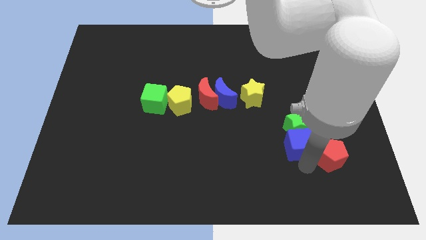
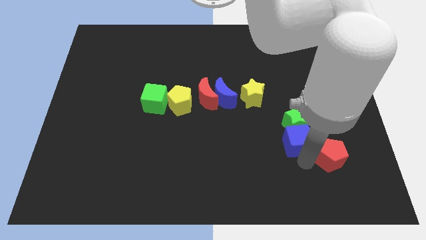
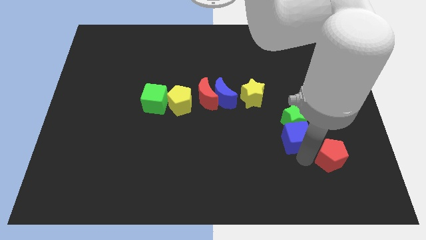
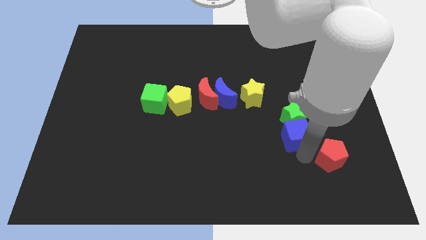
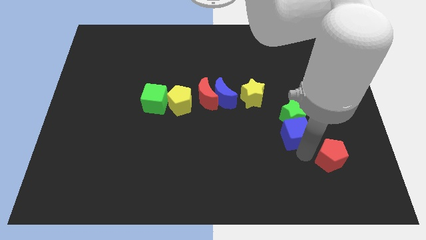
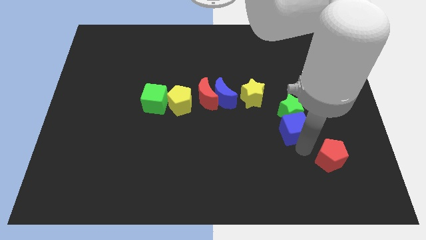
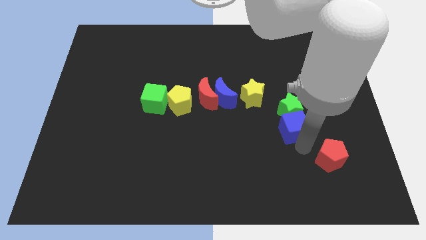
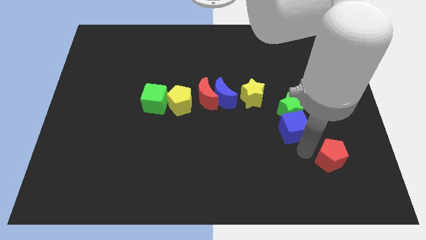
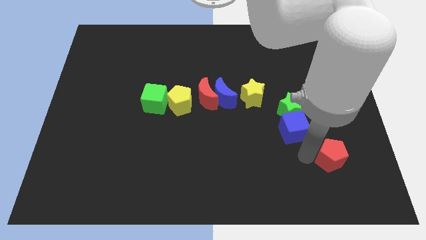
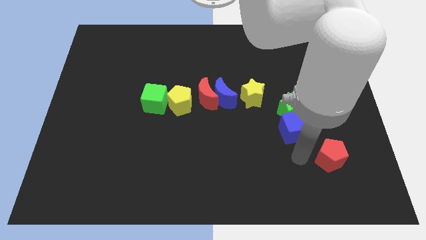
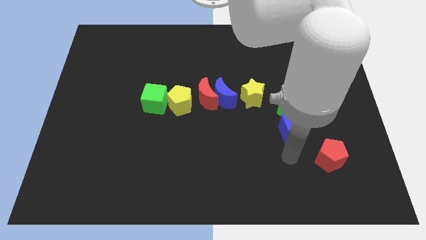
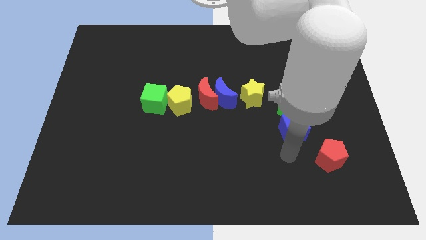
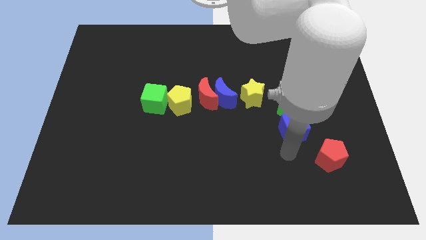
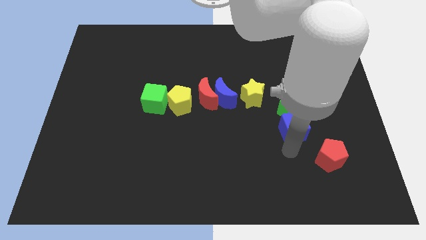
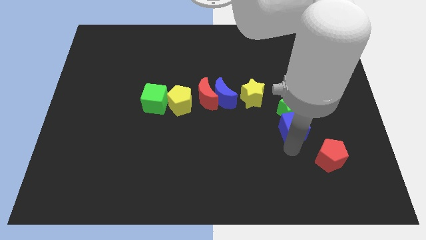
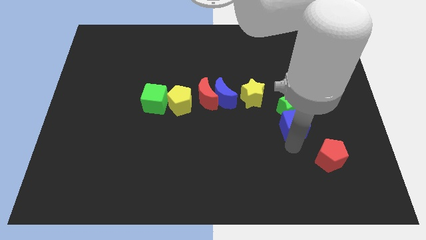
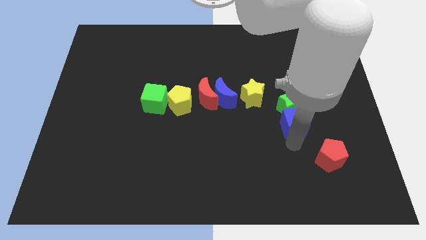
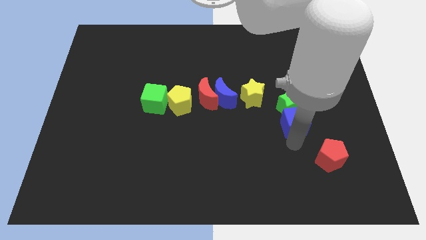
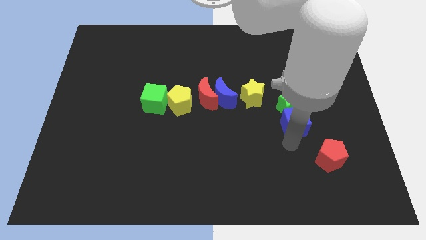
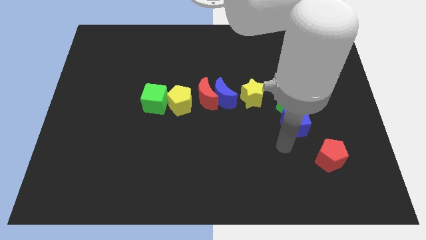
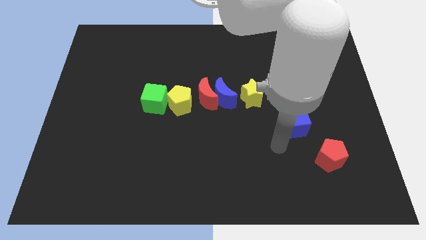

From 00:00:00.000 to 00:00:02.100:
push blue cube and green star towards the right of the yellow star

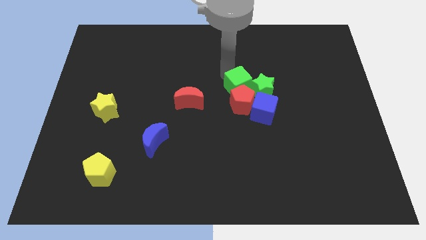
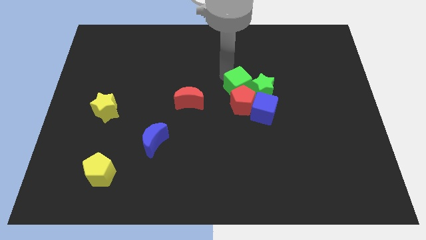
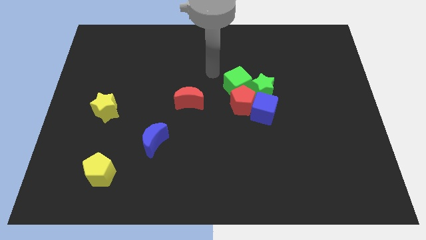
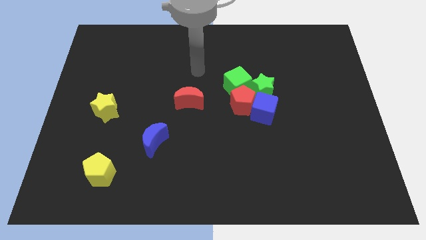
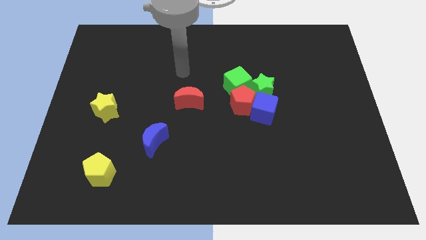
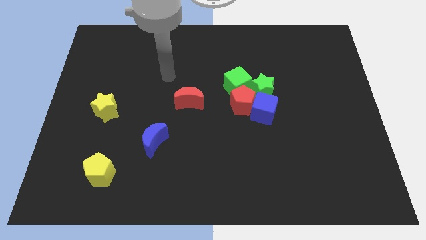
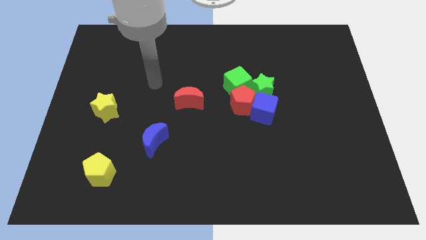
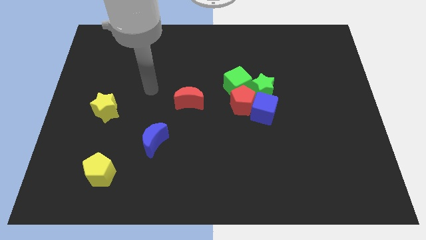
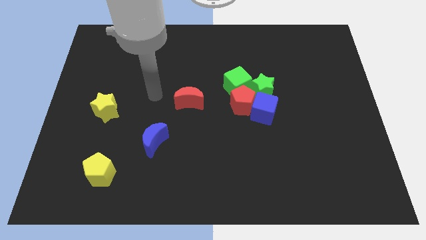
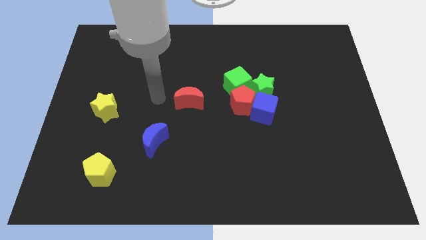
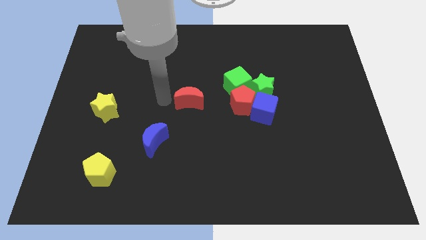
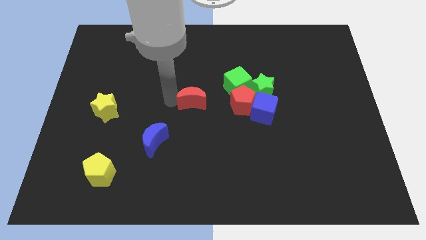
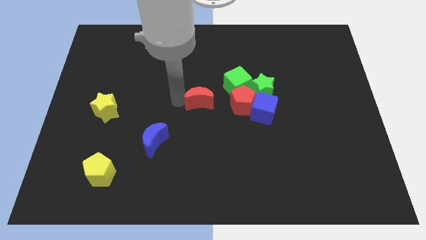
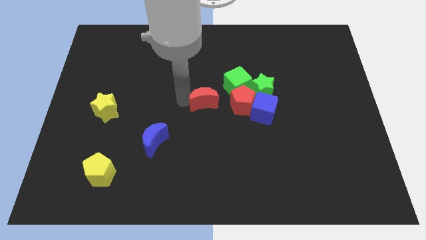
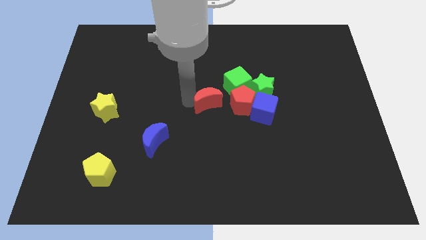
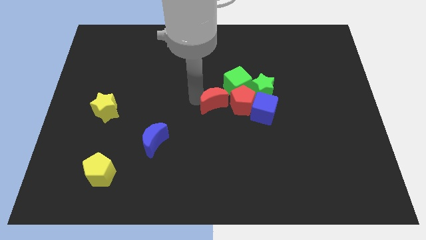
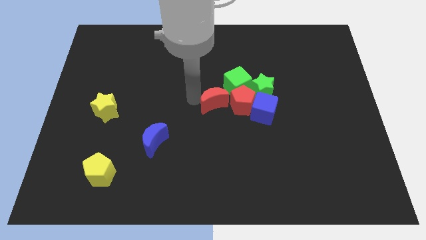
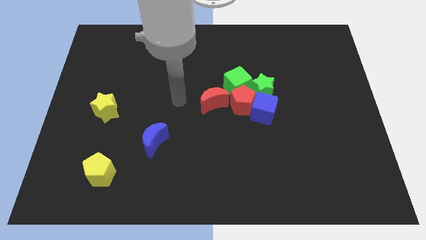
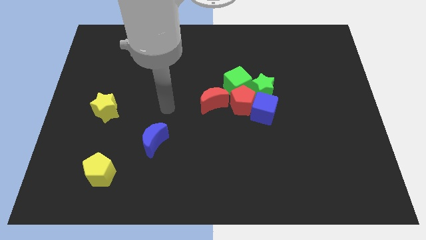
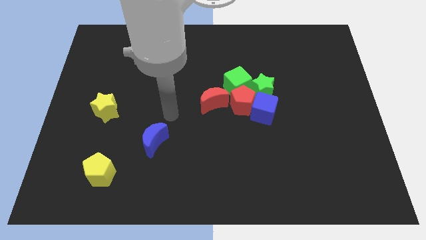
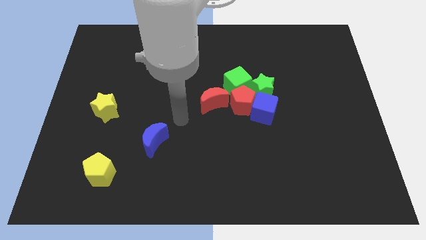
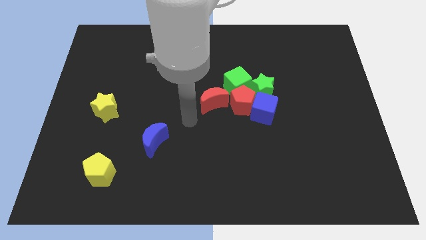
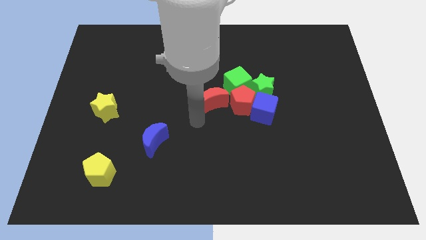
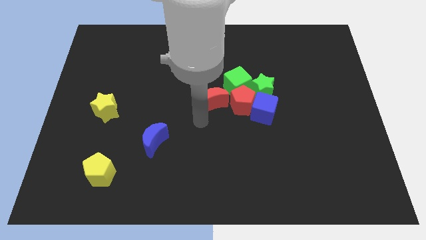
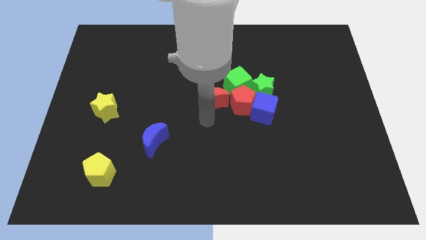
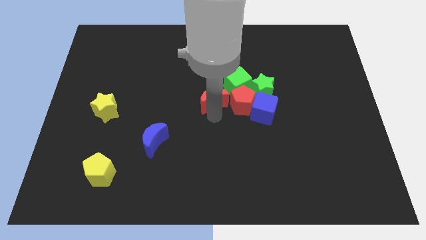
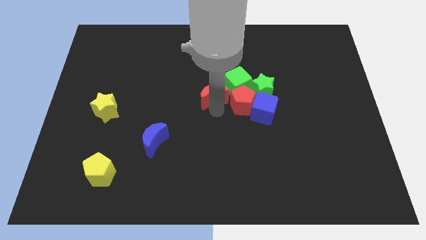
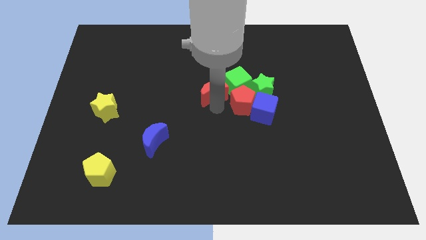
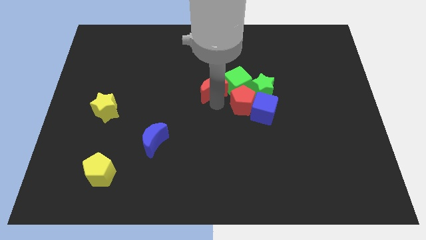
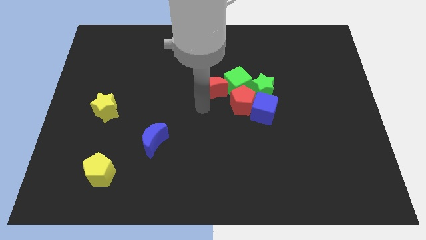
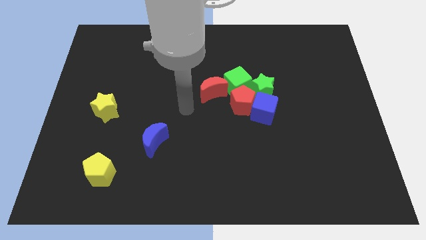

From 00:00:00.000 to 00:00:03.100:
push the red crescent into the left side of the green cube

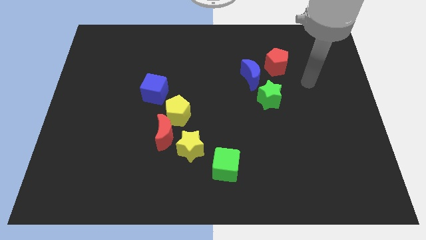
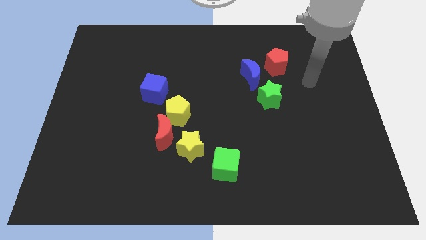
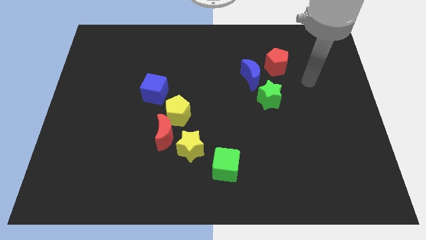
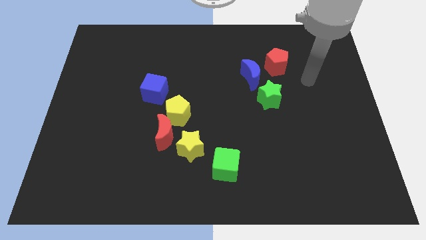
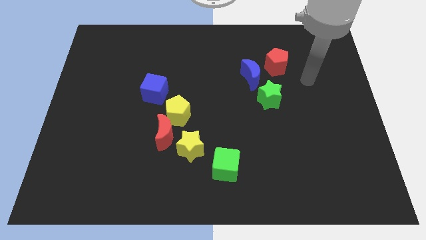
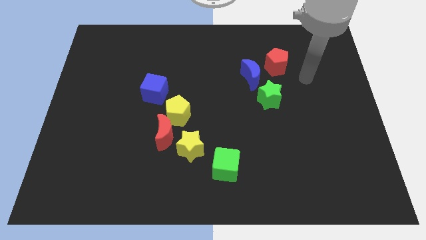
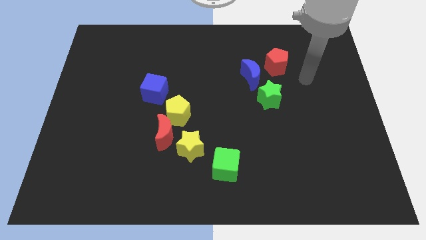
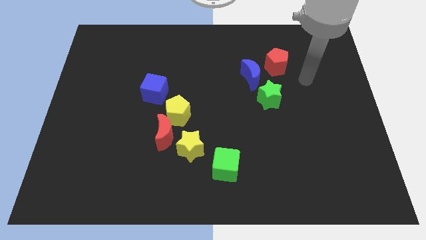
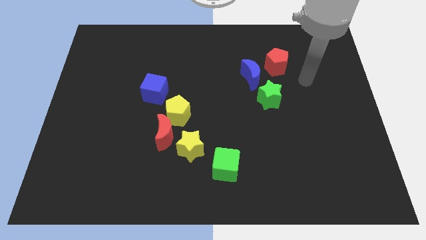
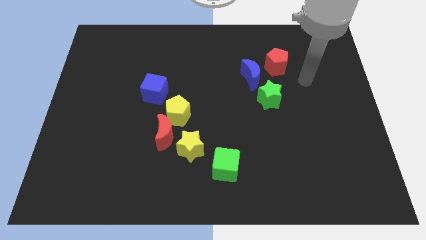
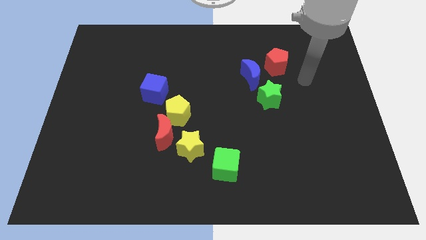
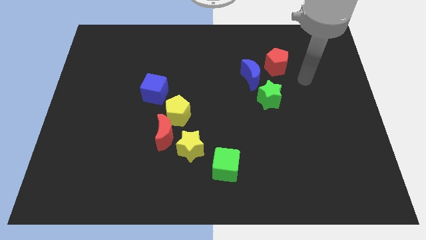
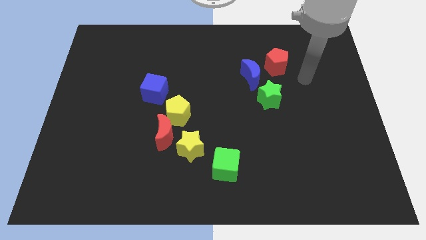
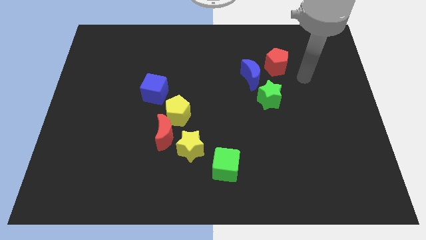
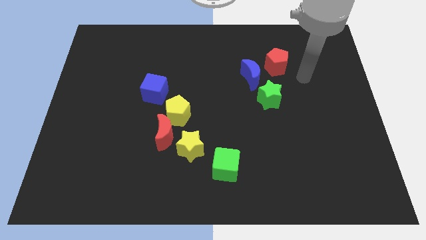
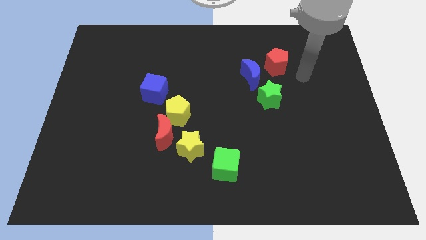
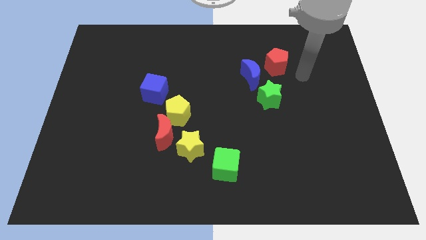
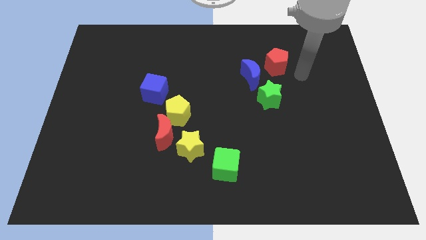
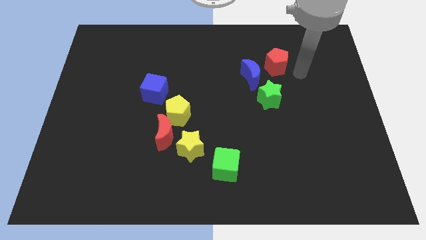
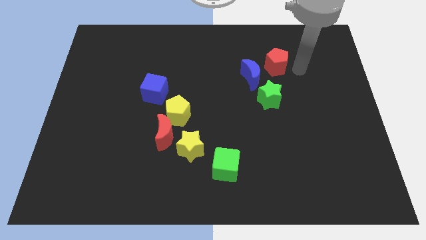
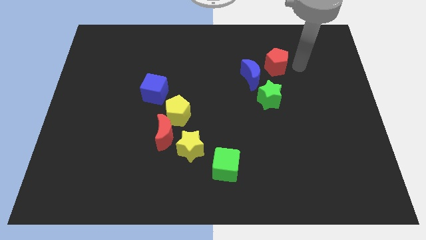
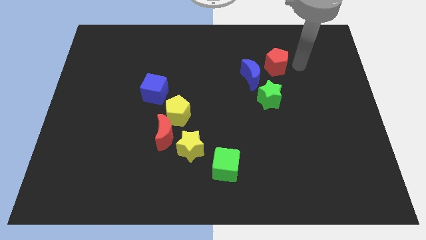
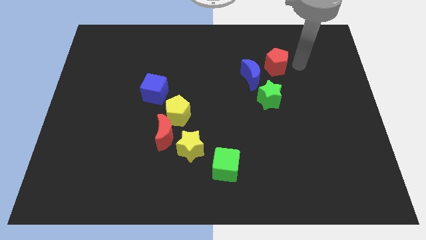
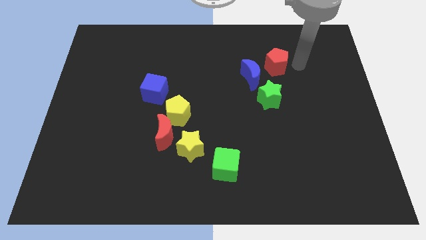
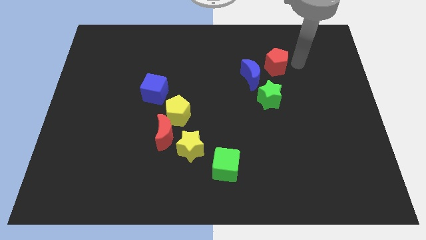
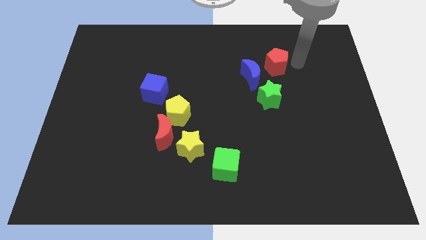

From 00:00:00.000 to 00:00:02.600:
move your arm to the right of the red pentagon

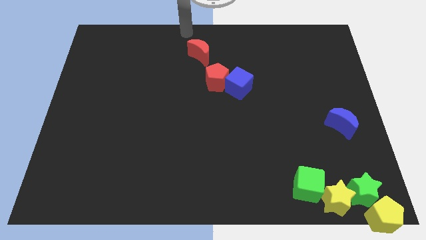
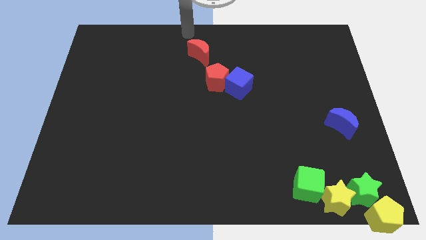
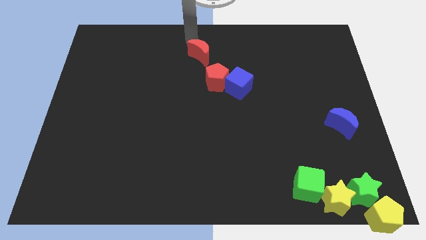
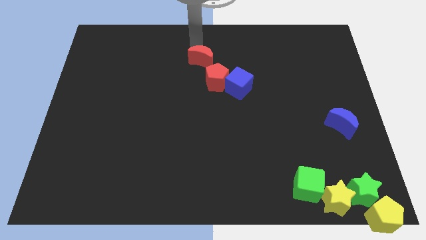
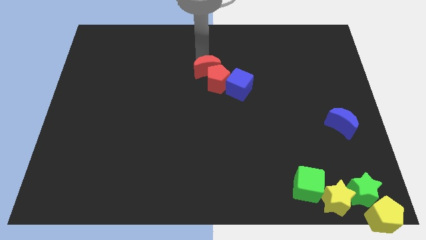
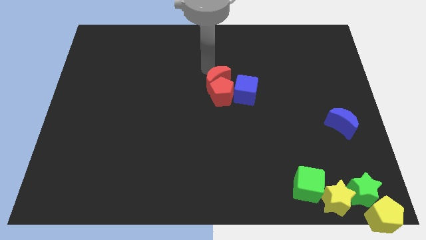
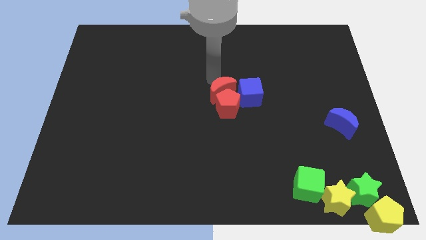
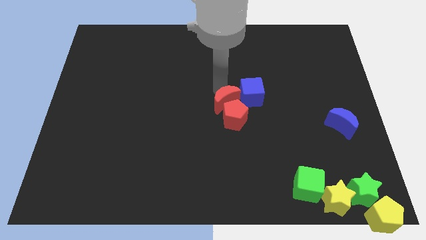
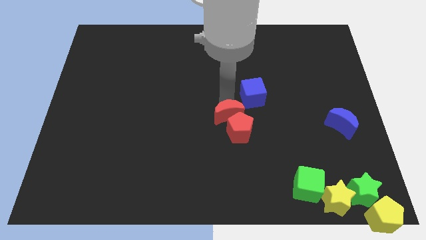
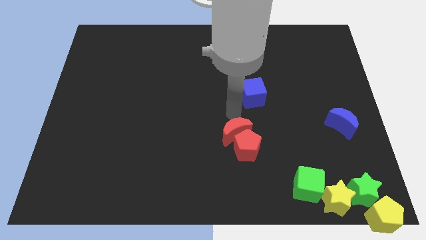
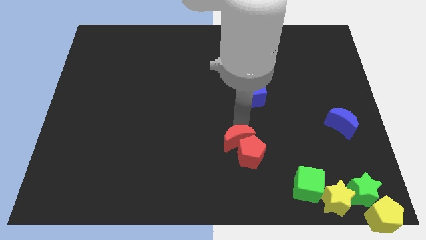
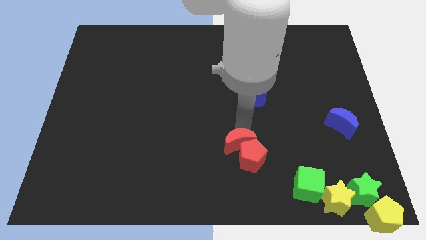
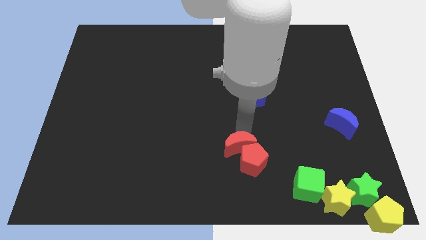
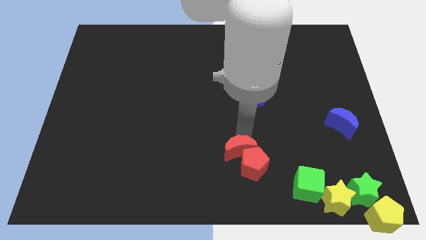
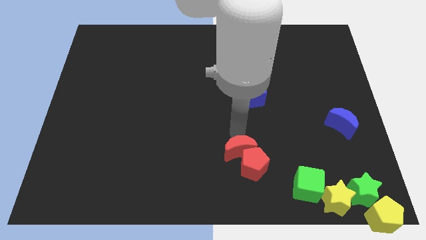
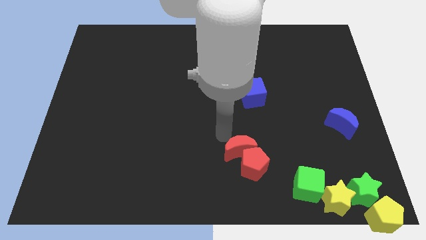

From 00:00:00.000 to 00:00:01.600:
push red pentagon with the red moon
